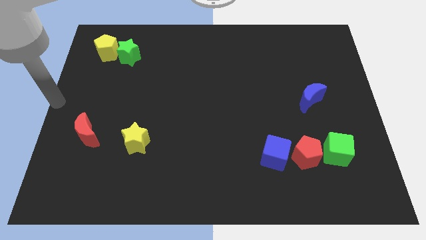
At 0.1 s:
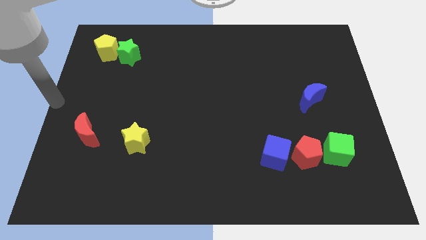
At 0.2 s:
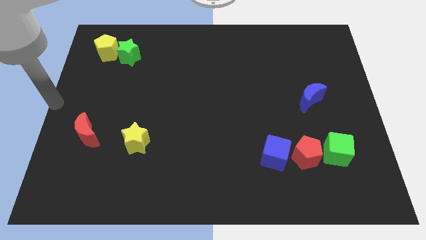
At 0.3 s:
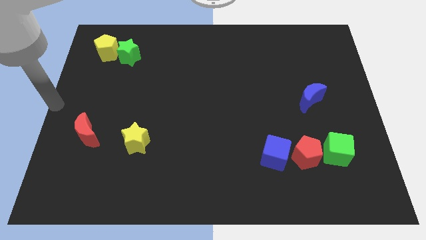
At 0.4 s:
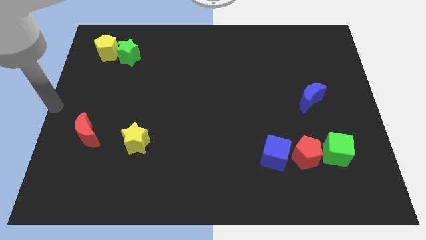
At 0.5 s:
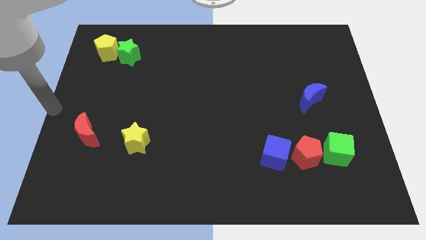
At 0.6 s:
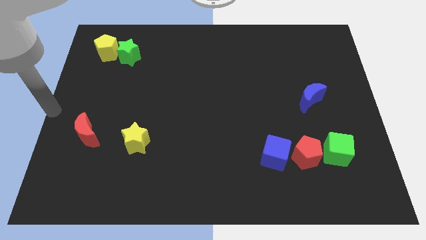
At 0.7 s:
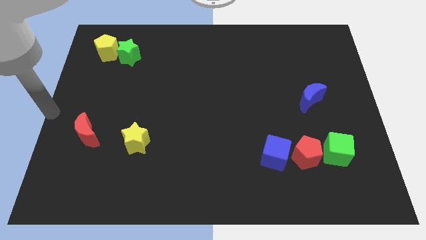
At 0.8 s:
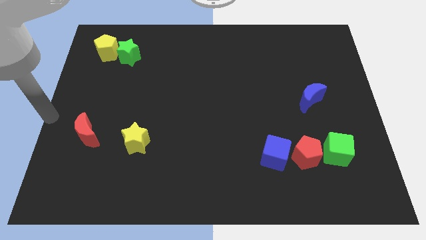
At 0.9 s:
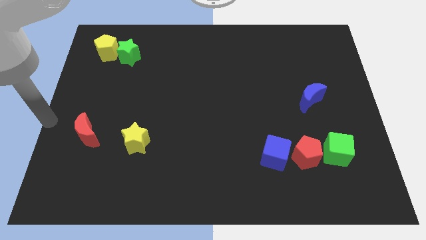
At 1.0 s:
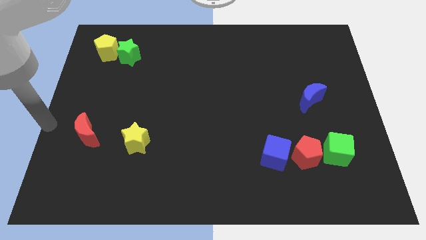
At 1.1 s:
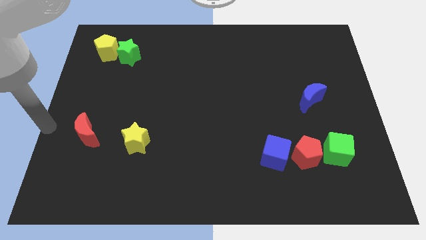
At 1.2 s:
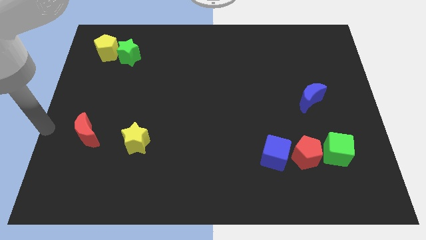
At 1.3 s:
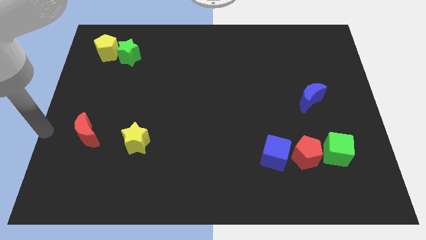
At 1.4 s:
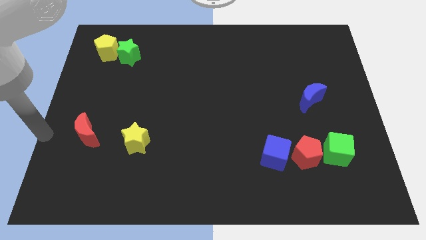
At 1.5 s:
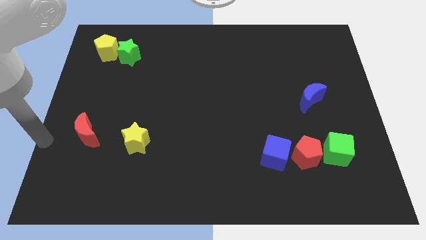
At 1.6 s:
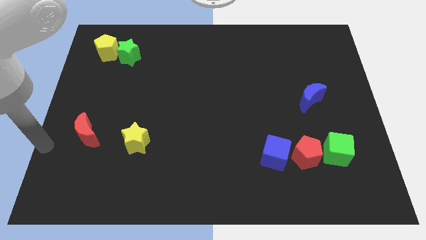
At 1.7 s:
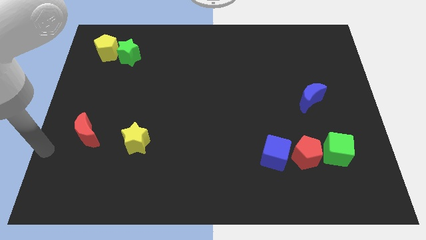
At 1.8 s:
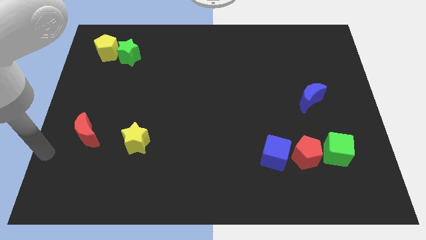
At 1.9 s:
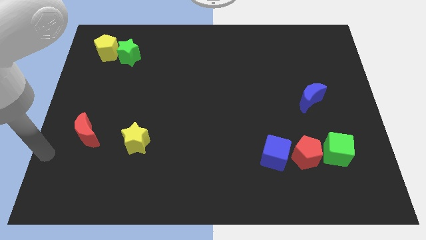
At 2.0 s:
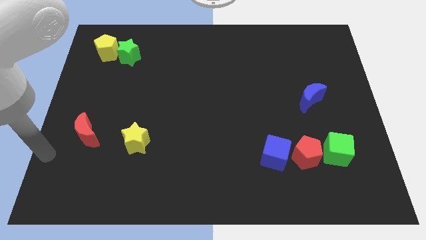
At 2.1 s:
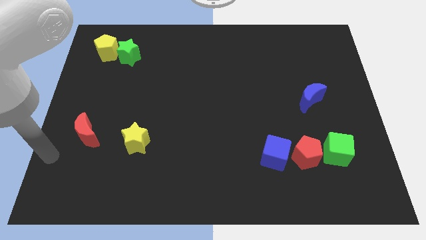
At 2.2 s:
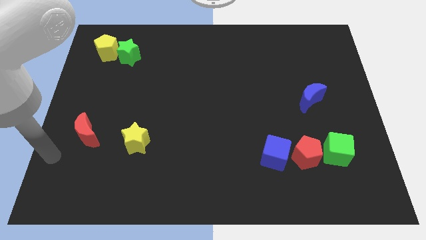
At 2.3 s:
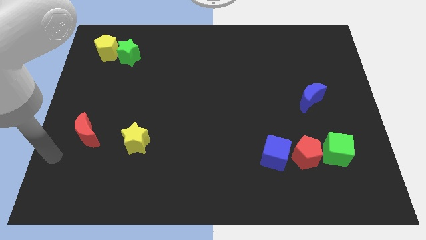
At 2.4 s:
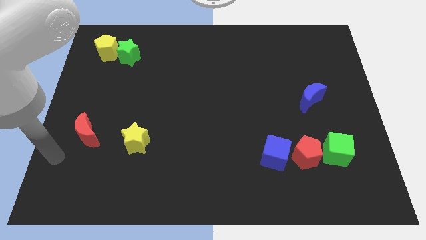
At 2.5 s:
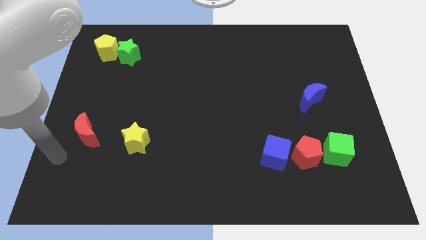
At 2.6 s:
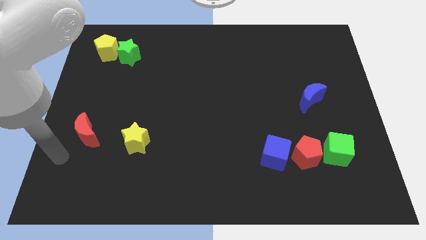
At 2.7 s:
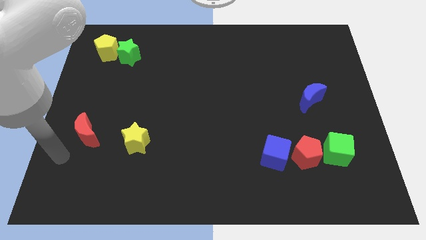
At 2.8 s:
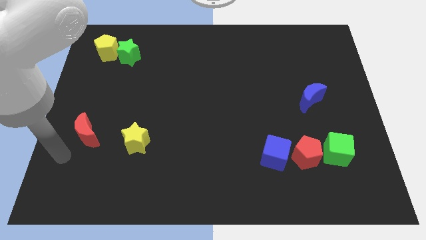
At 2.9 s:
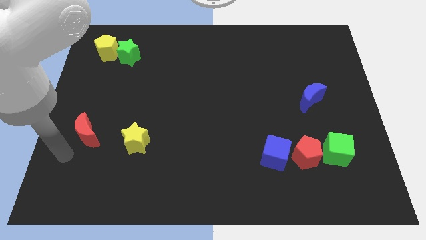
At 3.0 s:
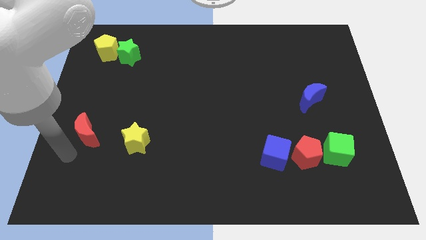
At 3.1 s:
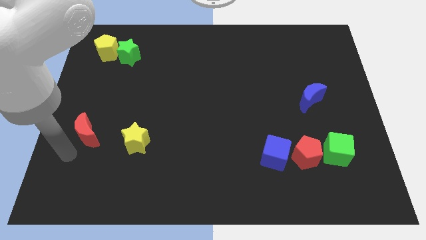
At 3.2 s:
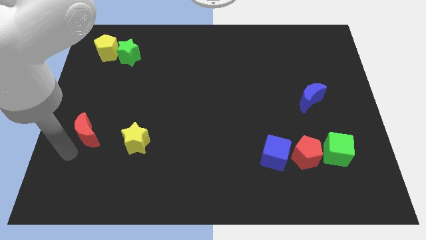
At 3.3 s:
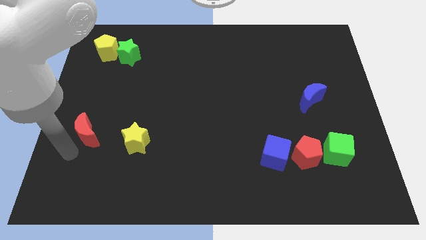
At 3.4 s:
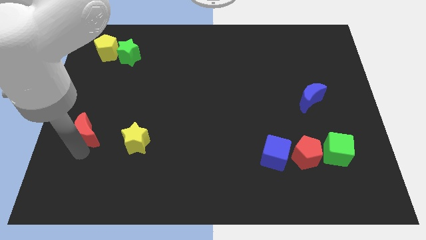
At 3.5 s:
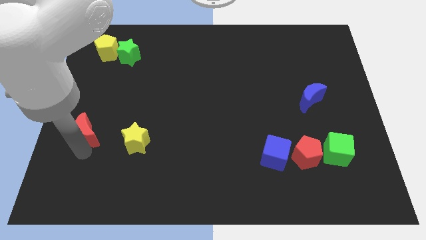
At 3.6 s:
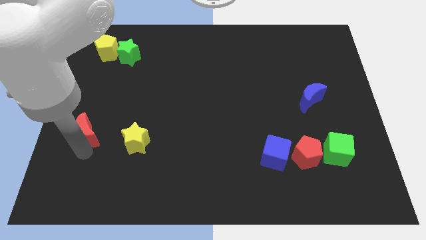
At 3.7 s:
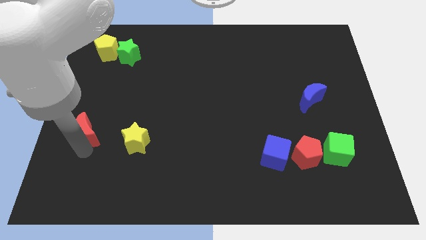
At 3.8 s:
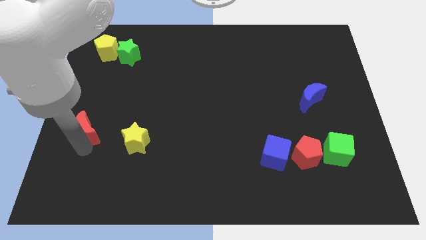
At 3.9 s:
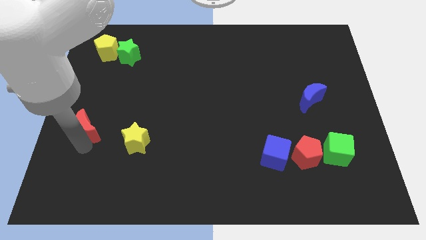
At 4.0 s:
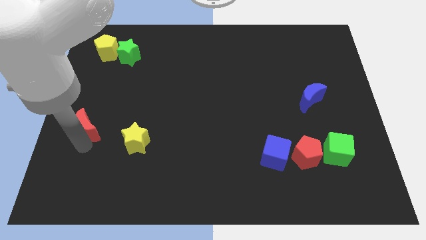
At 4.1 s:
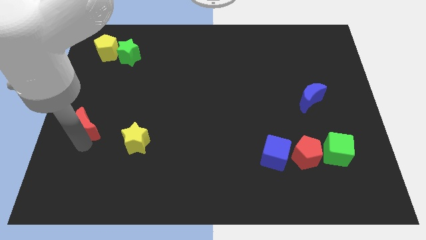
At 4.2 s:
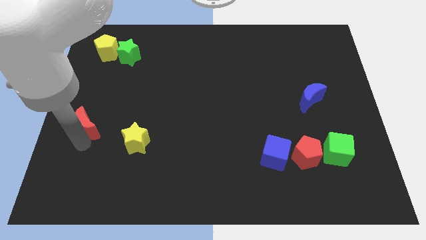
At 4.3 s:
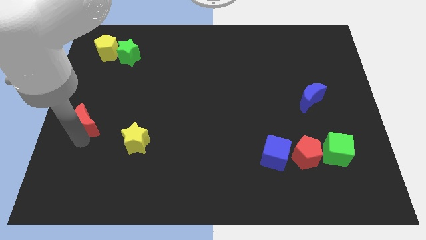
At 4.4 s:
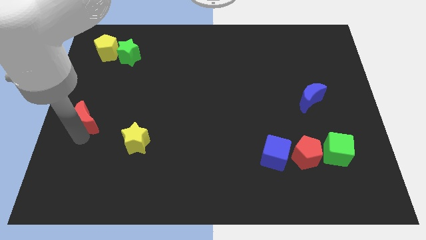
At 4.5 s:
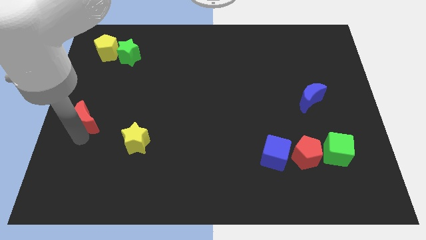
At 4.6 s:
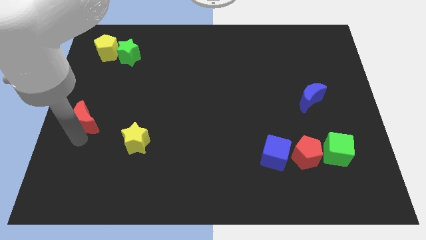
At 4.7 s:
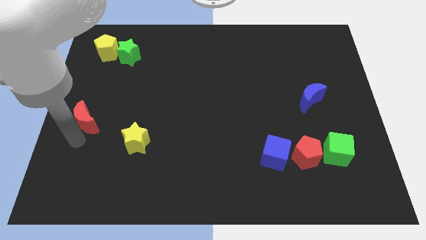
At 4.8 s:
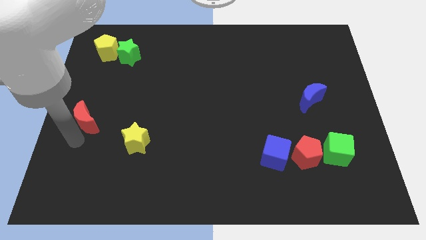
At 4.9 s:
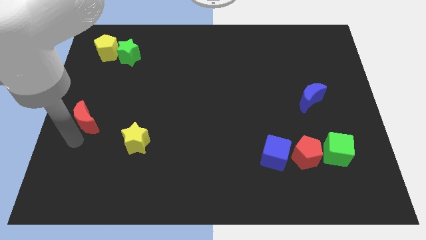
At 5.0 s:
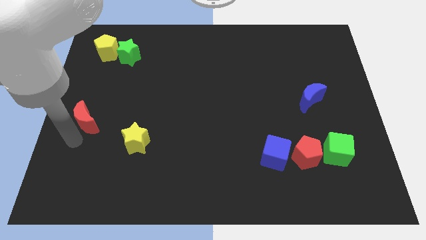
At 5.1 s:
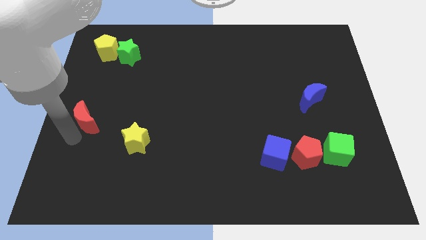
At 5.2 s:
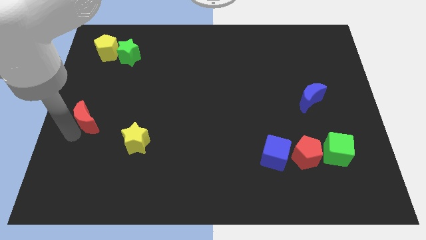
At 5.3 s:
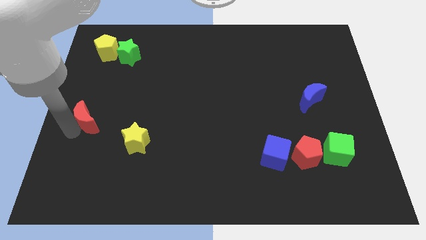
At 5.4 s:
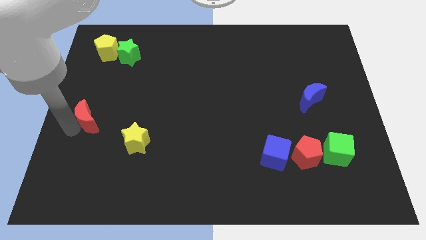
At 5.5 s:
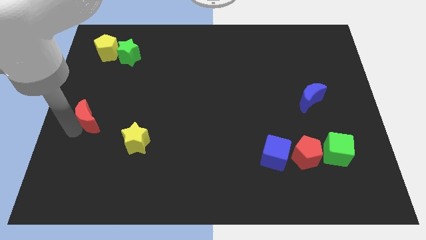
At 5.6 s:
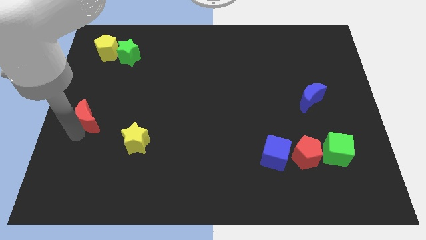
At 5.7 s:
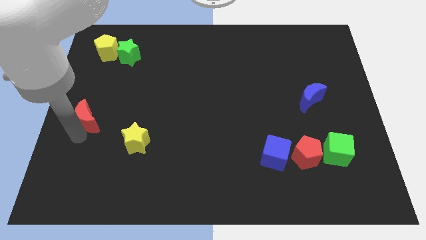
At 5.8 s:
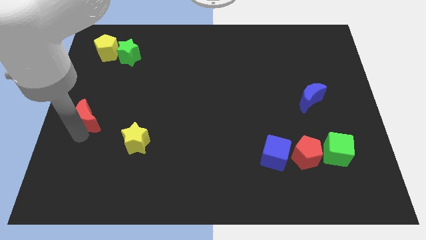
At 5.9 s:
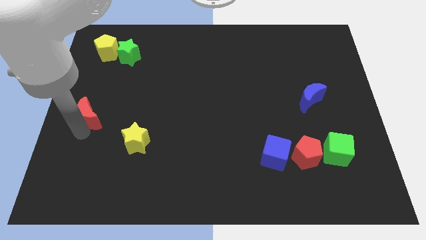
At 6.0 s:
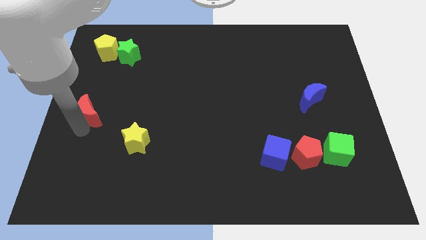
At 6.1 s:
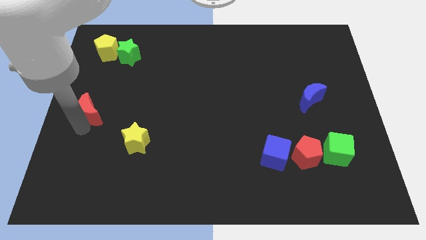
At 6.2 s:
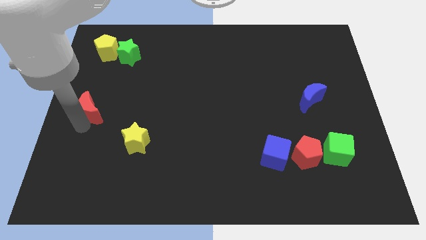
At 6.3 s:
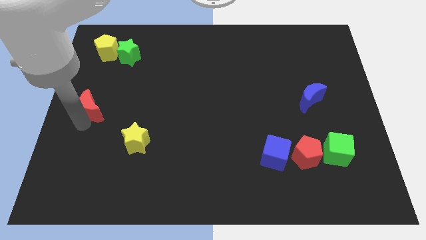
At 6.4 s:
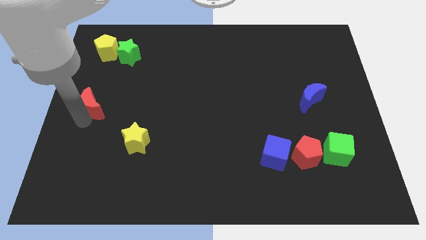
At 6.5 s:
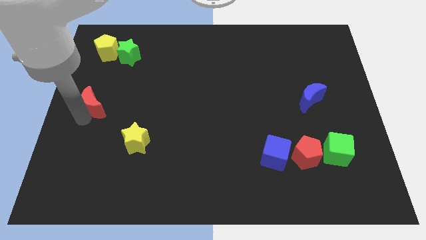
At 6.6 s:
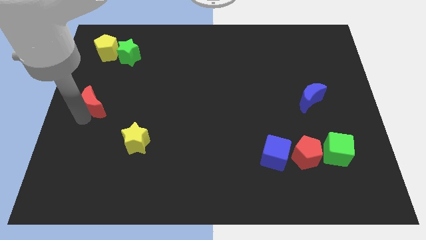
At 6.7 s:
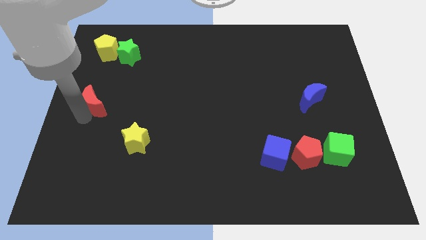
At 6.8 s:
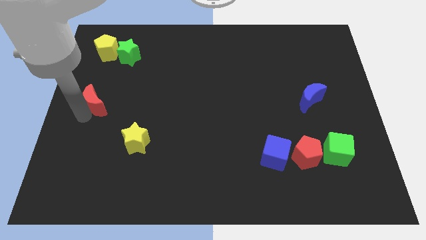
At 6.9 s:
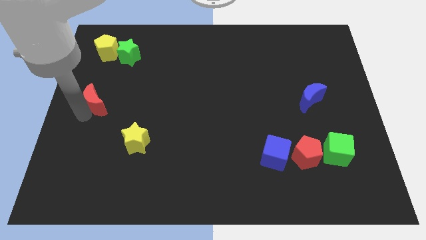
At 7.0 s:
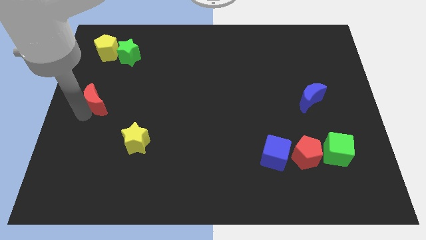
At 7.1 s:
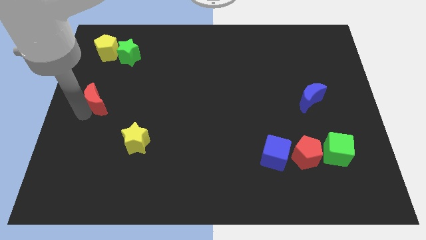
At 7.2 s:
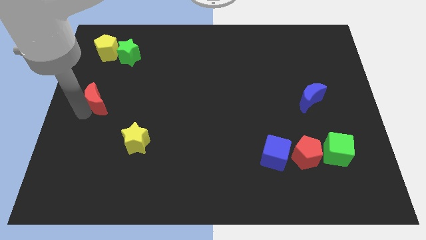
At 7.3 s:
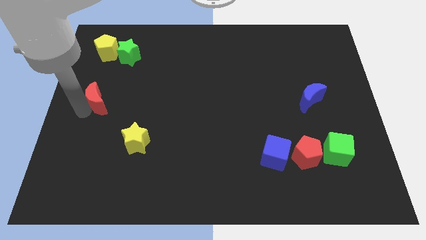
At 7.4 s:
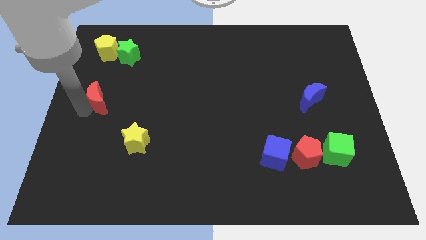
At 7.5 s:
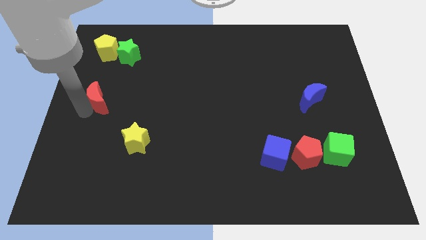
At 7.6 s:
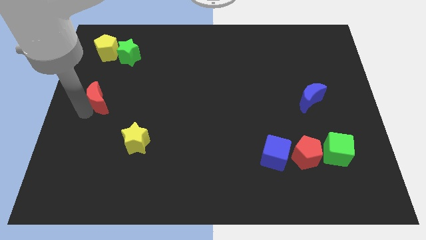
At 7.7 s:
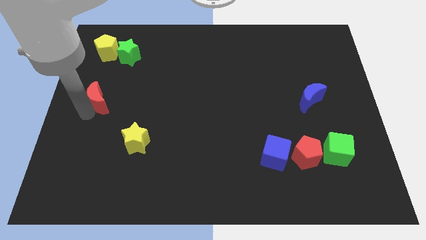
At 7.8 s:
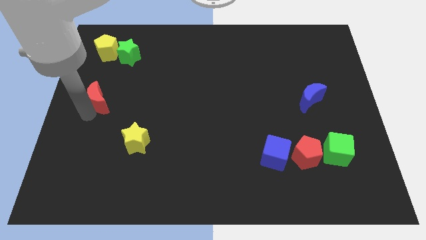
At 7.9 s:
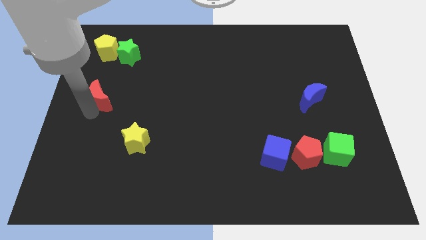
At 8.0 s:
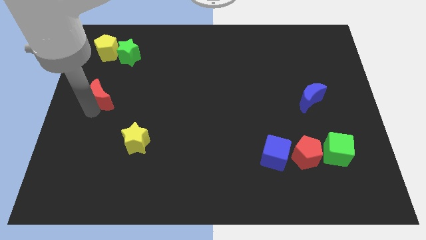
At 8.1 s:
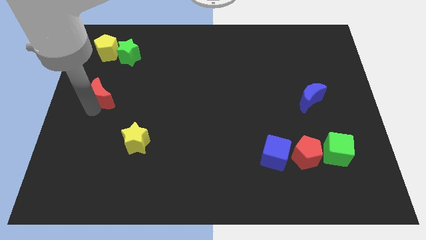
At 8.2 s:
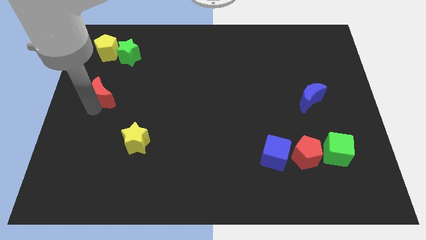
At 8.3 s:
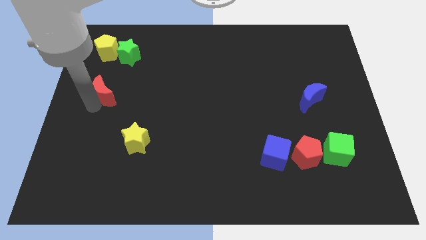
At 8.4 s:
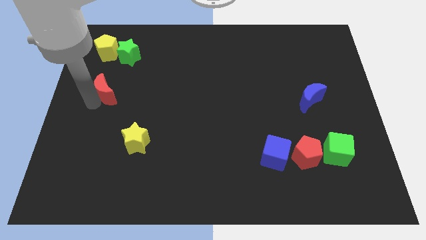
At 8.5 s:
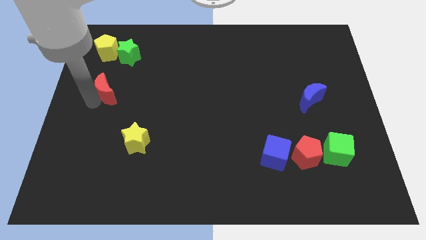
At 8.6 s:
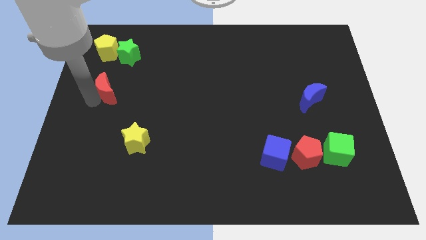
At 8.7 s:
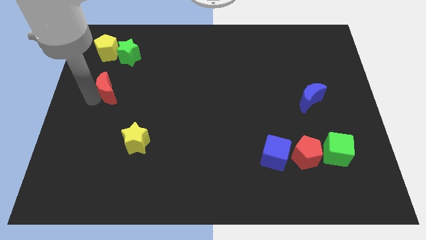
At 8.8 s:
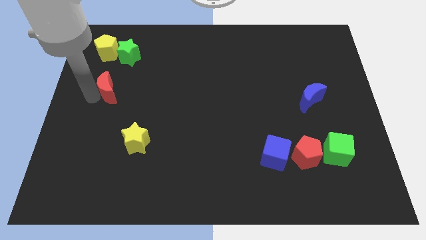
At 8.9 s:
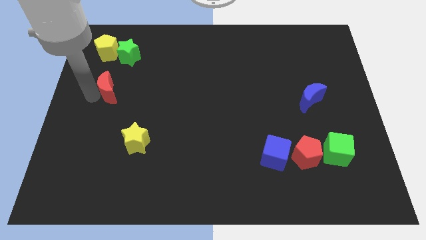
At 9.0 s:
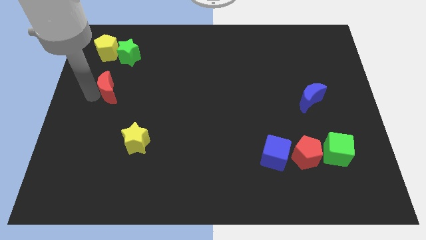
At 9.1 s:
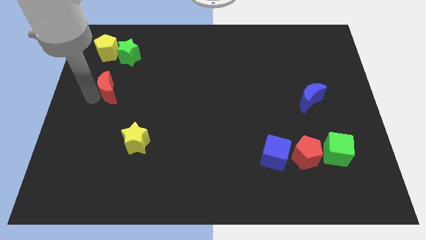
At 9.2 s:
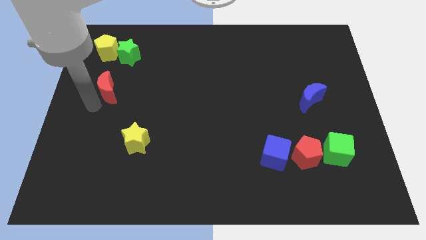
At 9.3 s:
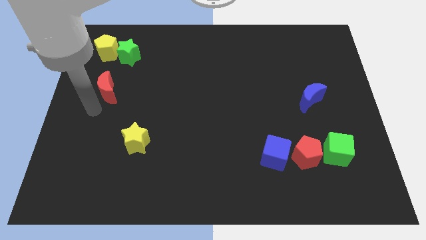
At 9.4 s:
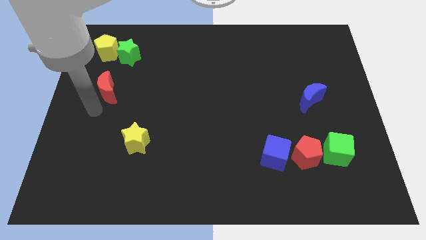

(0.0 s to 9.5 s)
place the red moon in between the yellow pentagon and yellow star
